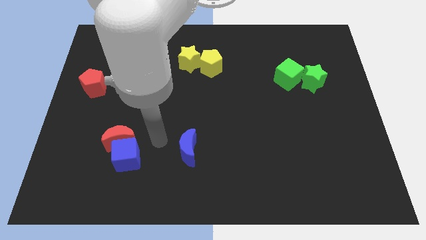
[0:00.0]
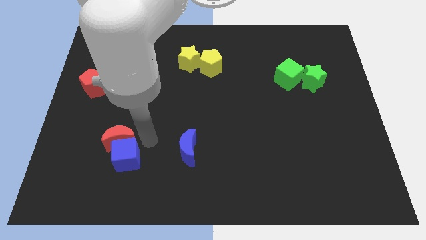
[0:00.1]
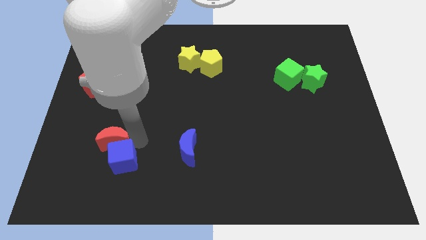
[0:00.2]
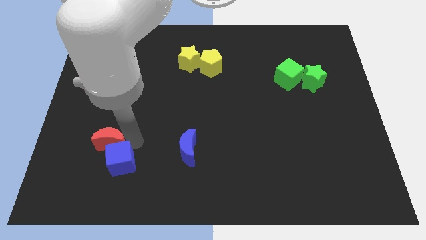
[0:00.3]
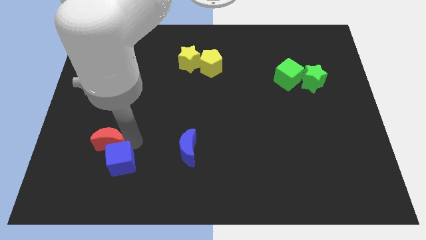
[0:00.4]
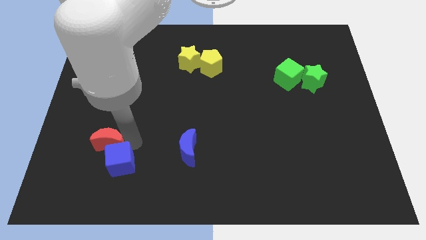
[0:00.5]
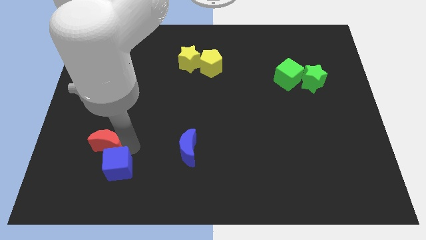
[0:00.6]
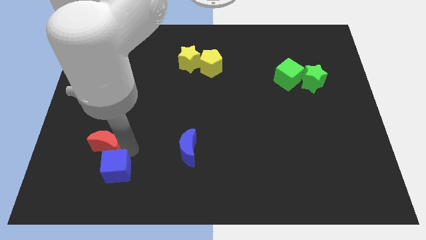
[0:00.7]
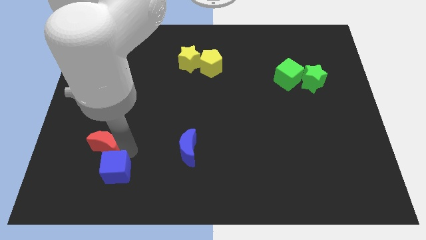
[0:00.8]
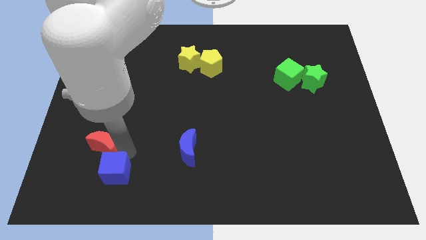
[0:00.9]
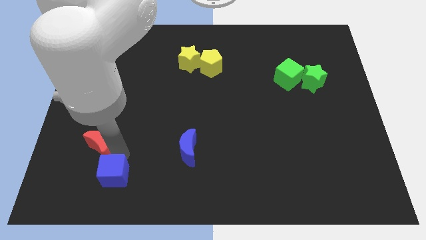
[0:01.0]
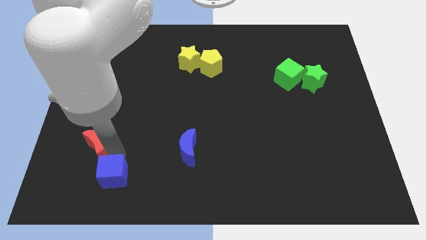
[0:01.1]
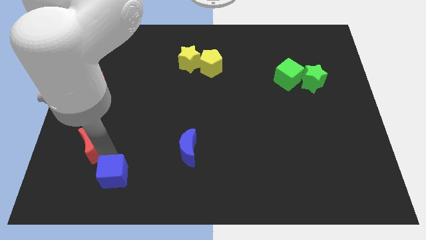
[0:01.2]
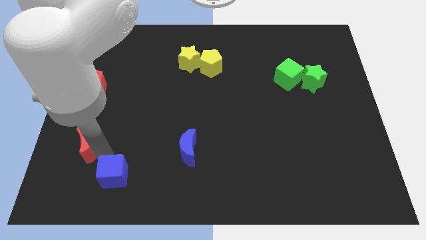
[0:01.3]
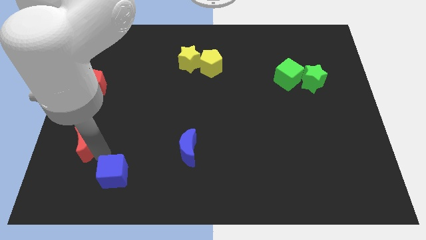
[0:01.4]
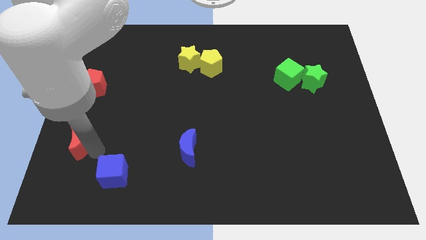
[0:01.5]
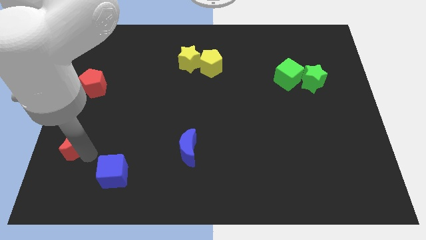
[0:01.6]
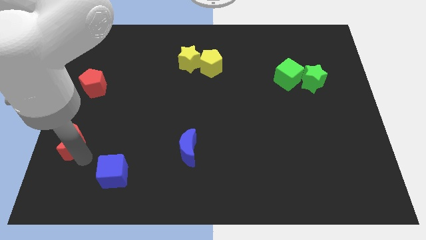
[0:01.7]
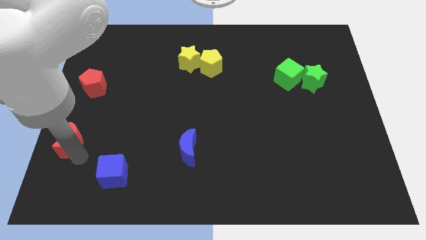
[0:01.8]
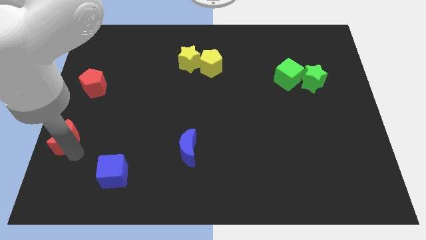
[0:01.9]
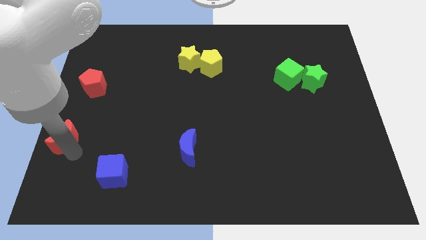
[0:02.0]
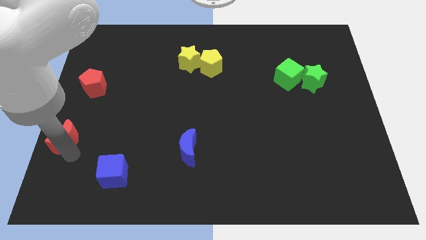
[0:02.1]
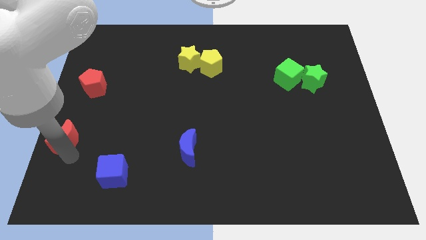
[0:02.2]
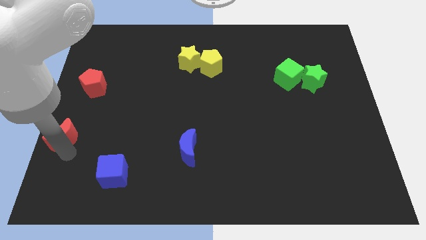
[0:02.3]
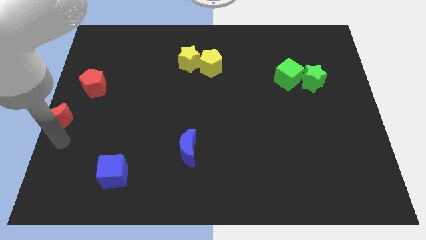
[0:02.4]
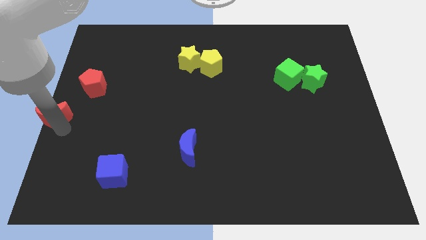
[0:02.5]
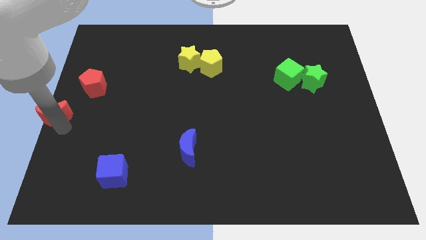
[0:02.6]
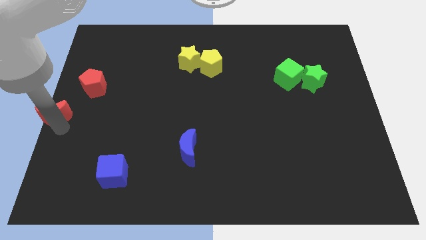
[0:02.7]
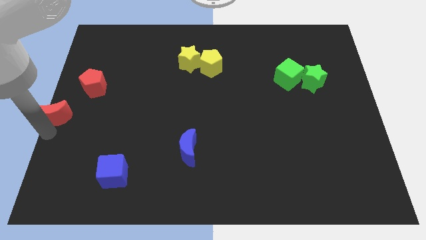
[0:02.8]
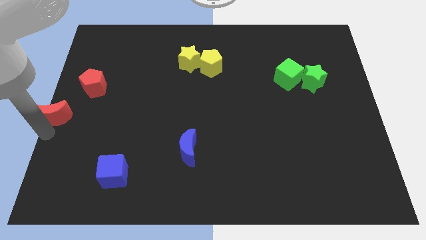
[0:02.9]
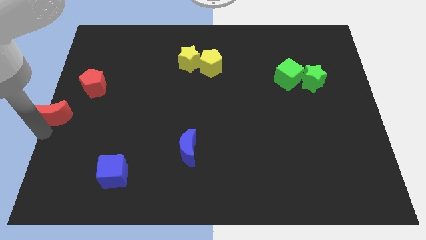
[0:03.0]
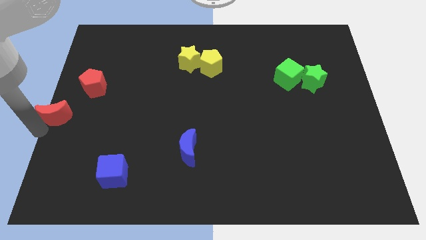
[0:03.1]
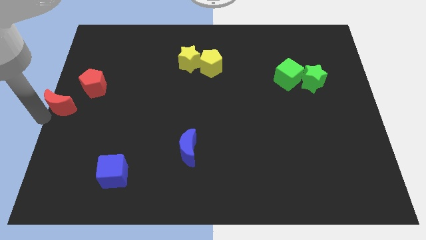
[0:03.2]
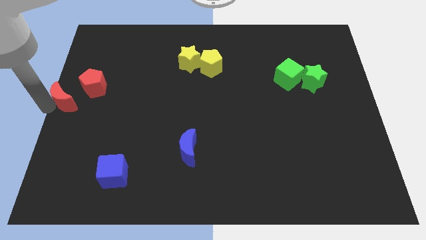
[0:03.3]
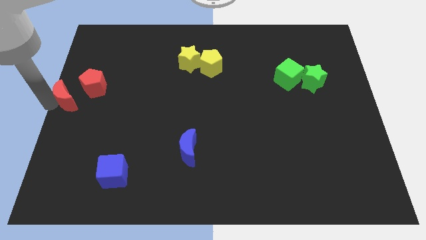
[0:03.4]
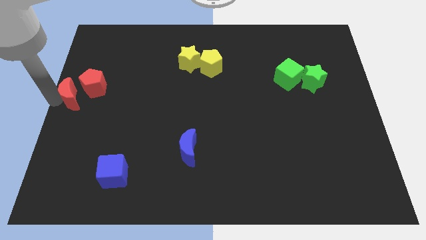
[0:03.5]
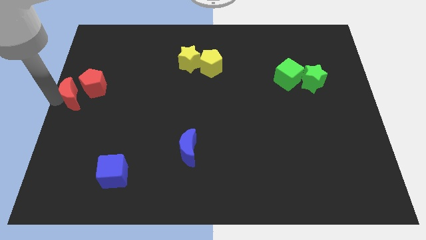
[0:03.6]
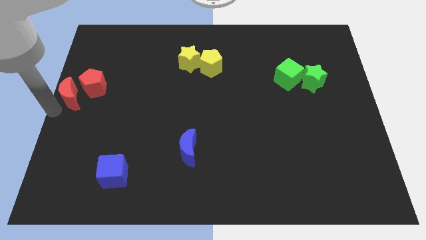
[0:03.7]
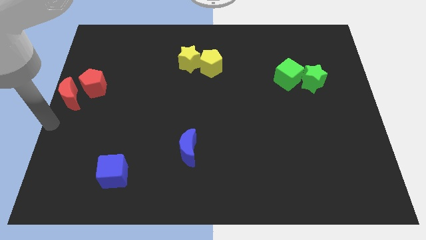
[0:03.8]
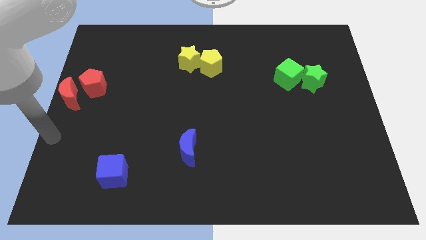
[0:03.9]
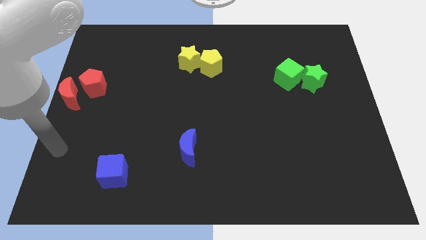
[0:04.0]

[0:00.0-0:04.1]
place the red moon left to the red pentagon

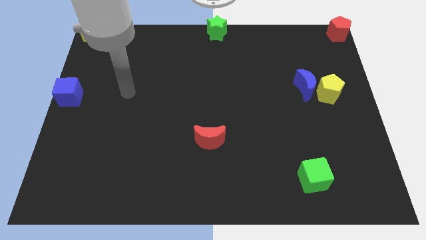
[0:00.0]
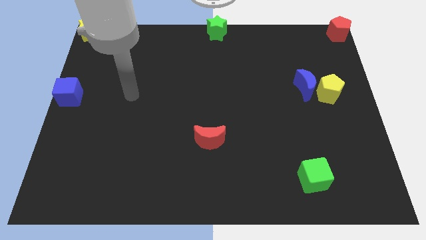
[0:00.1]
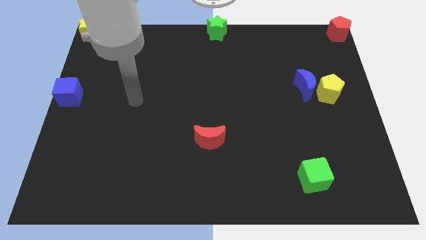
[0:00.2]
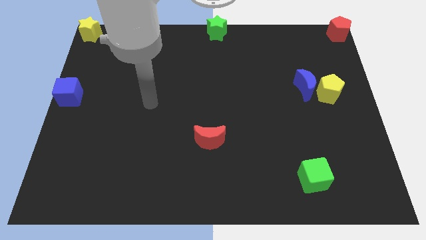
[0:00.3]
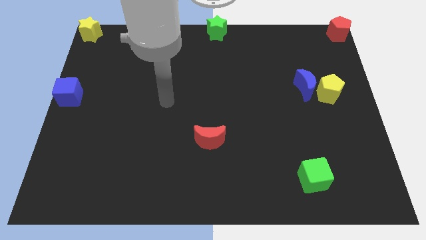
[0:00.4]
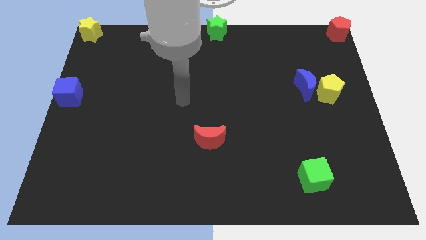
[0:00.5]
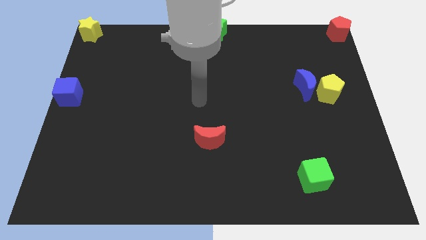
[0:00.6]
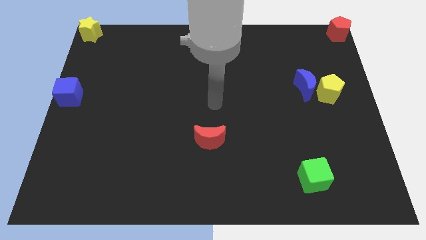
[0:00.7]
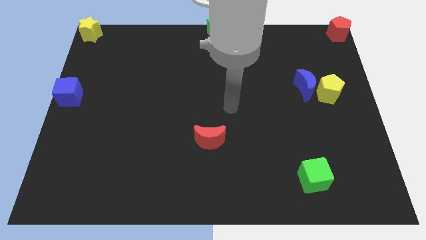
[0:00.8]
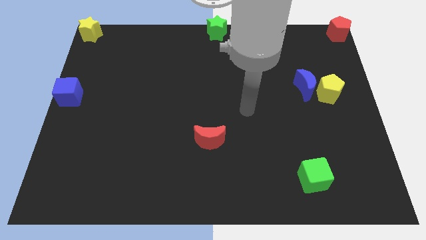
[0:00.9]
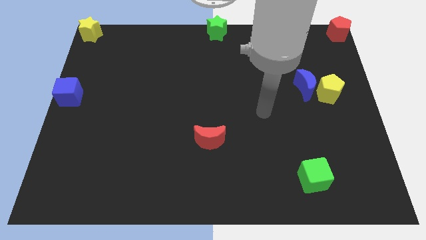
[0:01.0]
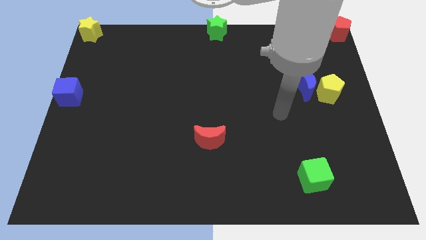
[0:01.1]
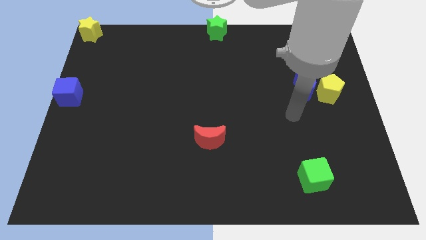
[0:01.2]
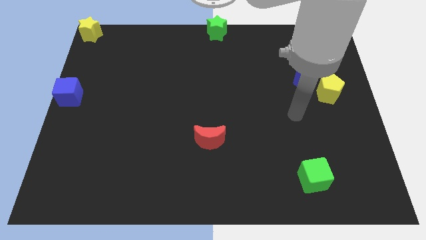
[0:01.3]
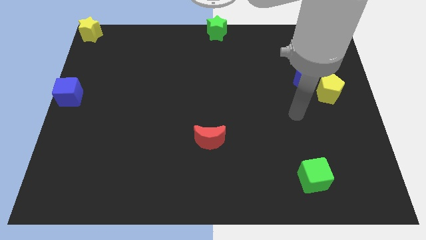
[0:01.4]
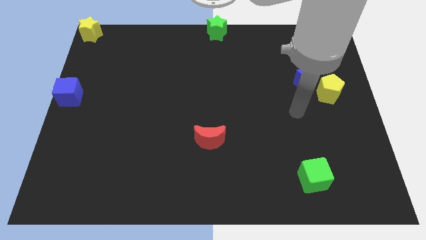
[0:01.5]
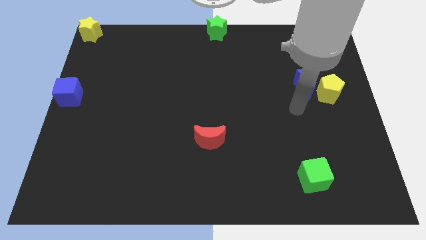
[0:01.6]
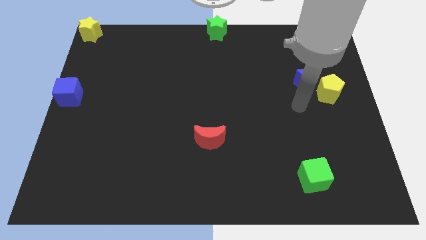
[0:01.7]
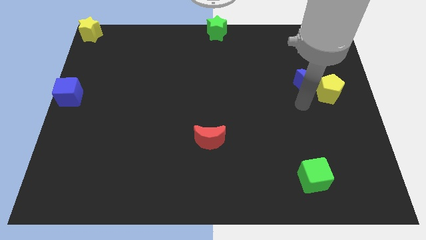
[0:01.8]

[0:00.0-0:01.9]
point the arm below the blue moon

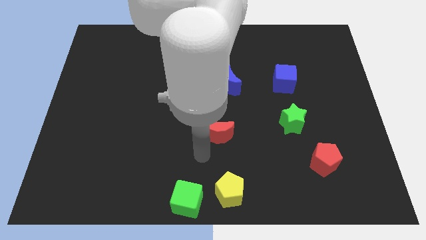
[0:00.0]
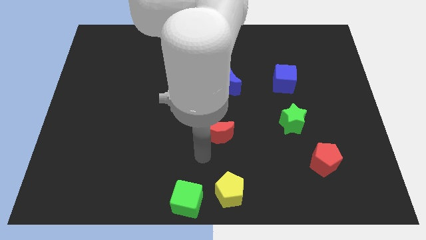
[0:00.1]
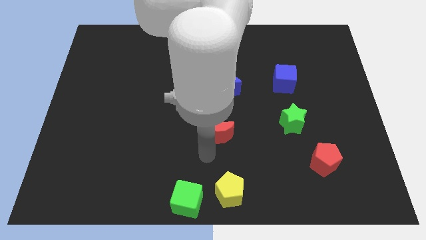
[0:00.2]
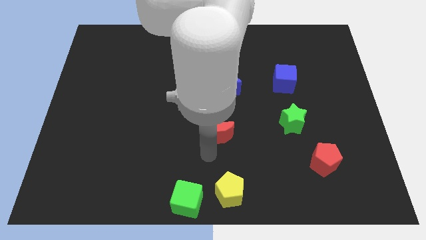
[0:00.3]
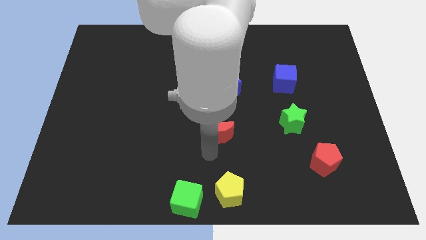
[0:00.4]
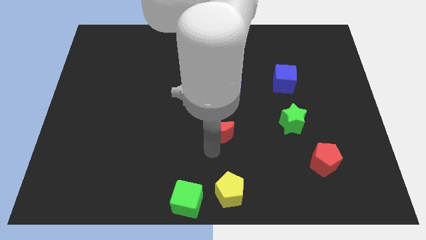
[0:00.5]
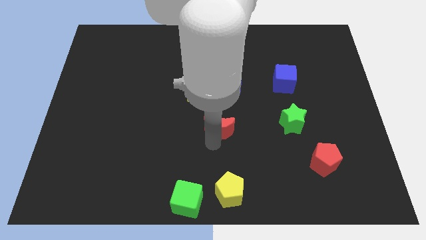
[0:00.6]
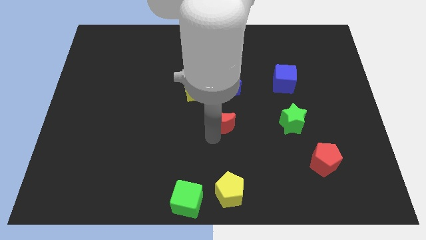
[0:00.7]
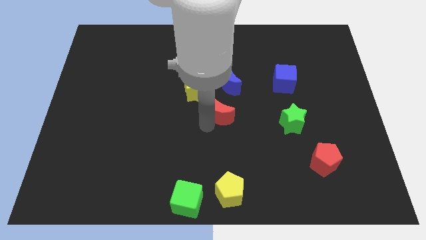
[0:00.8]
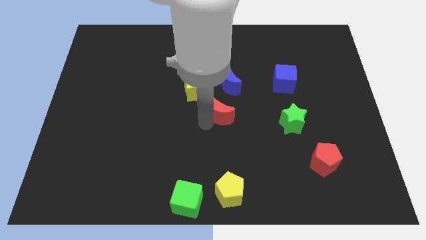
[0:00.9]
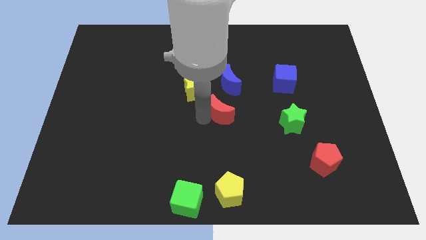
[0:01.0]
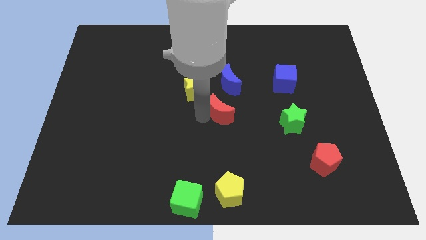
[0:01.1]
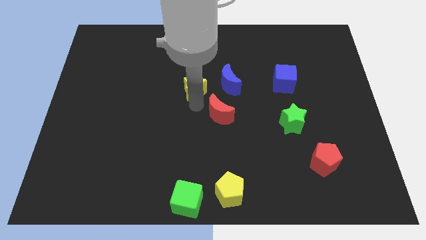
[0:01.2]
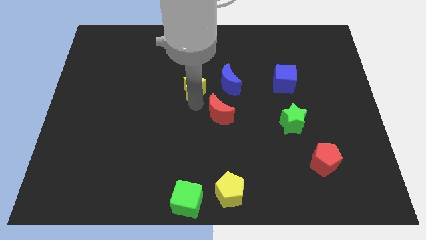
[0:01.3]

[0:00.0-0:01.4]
push the red crescent slightly to the top

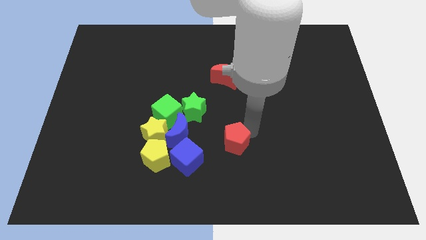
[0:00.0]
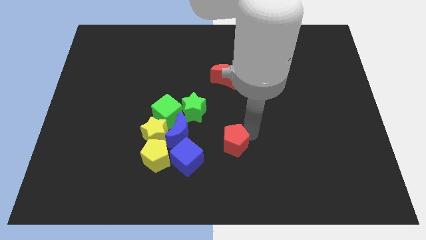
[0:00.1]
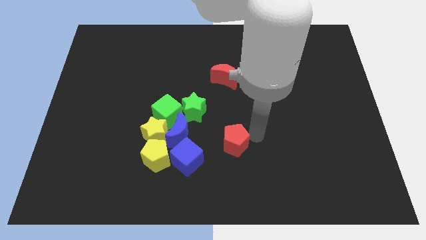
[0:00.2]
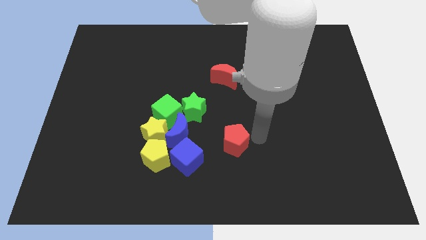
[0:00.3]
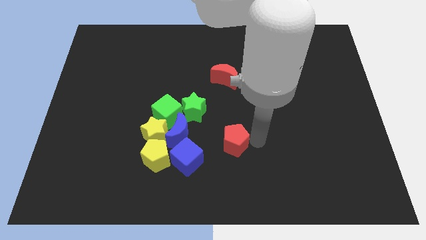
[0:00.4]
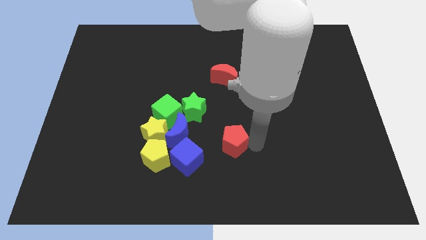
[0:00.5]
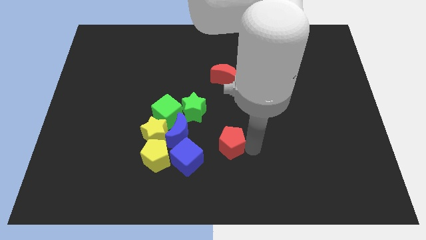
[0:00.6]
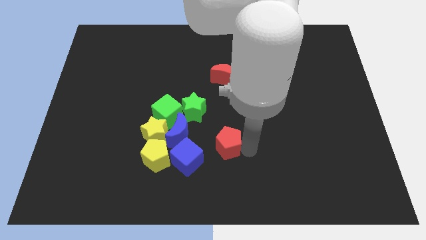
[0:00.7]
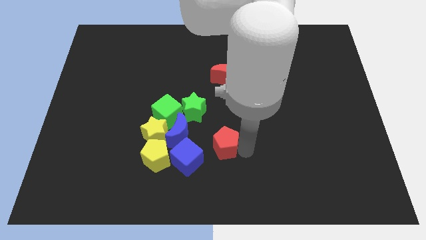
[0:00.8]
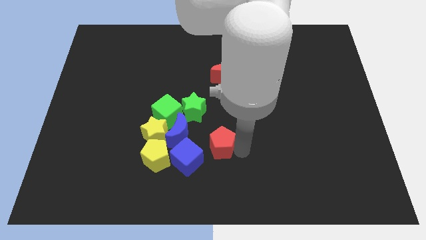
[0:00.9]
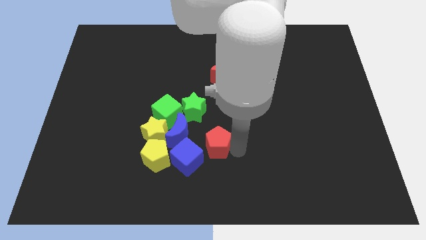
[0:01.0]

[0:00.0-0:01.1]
push the red pentagon towards the blue cube

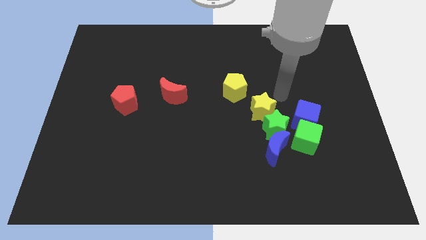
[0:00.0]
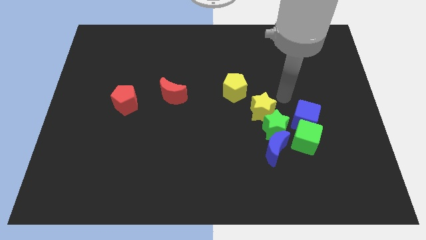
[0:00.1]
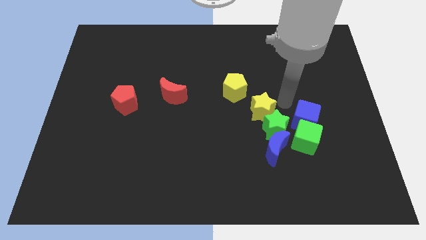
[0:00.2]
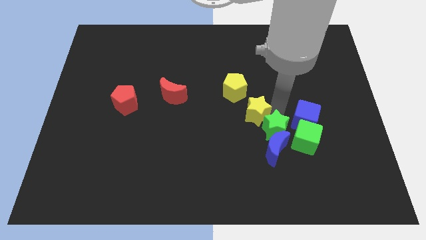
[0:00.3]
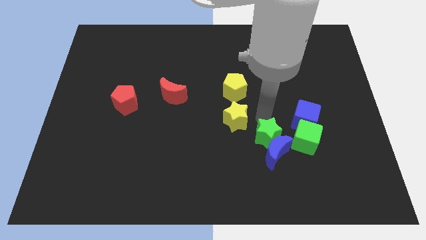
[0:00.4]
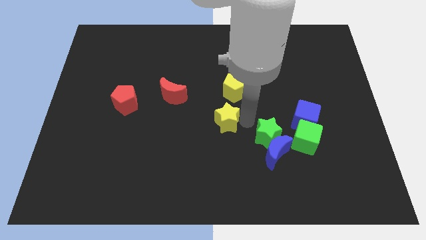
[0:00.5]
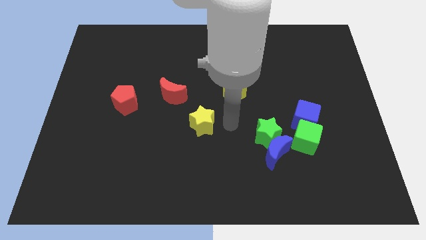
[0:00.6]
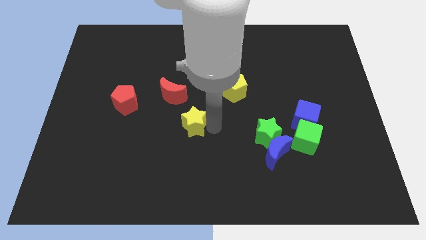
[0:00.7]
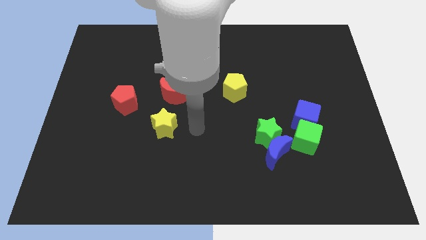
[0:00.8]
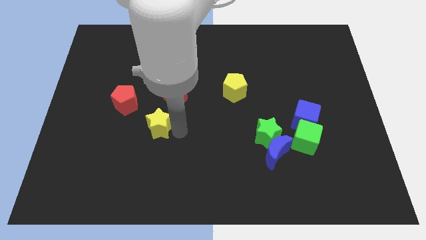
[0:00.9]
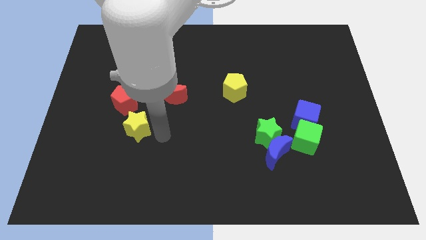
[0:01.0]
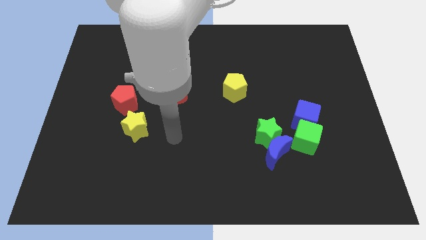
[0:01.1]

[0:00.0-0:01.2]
place the yellow star underneath the red pentagon
